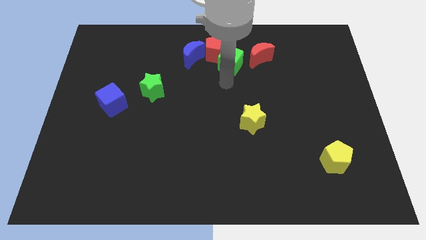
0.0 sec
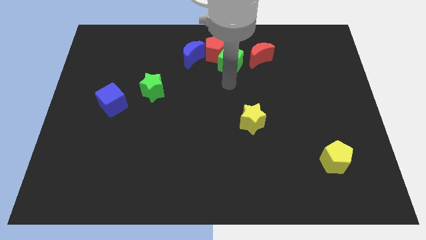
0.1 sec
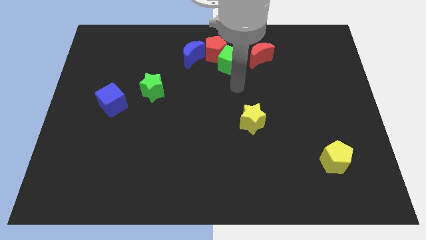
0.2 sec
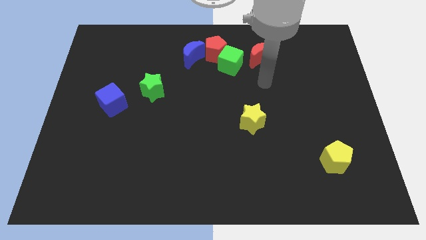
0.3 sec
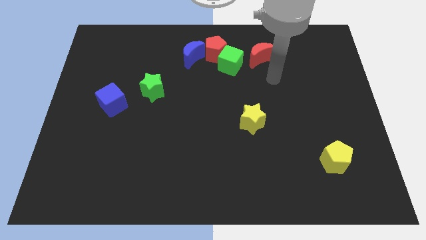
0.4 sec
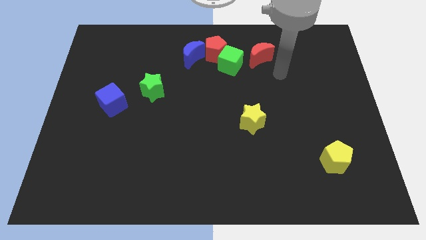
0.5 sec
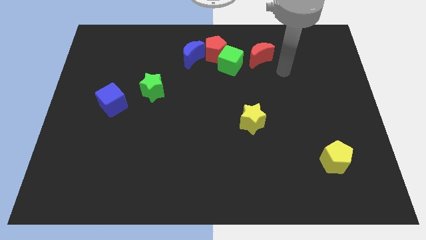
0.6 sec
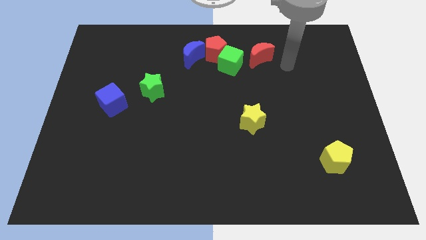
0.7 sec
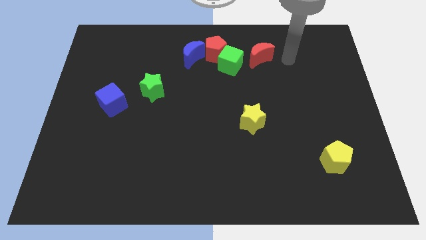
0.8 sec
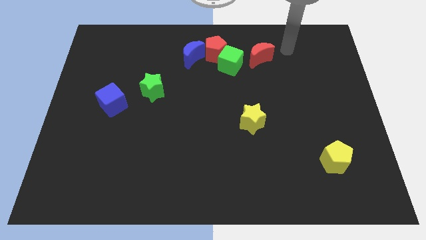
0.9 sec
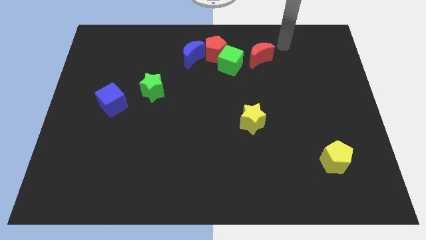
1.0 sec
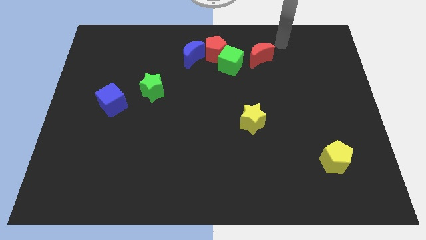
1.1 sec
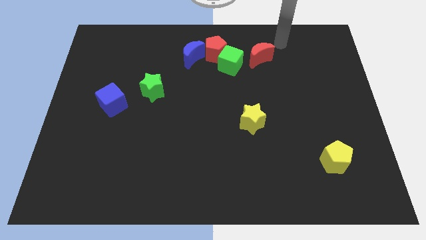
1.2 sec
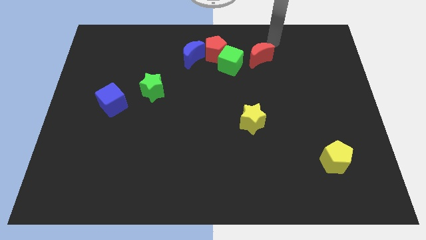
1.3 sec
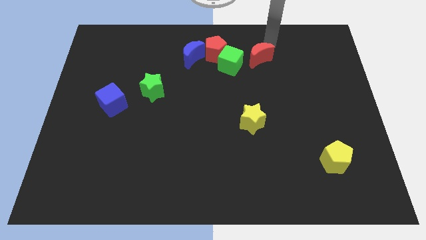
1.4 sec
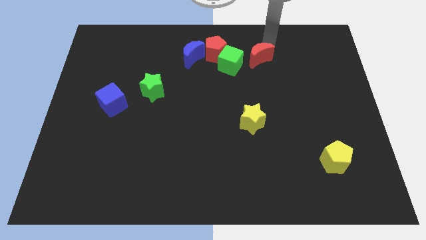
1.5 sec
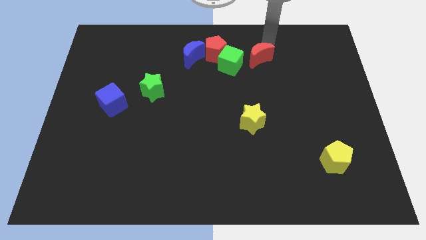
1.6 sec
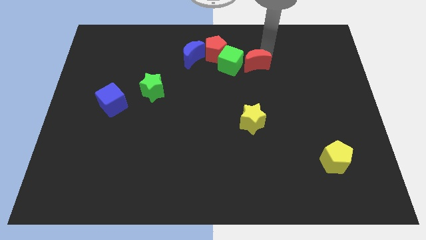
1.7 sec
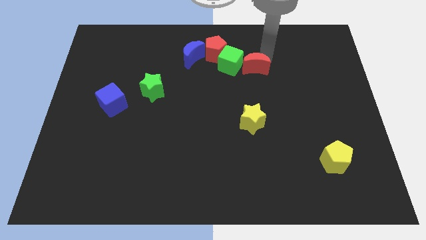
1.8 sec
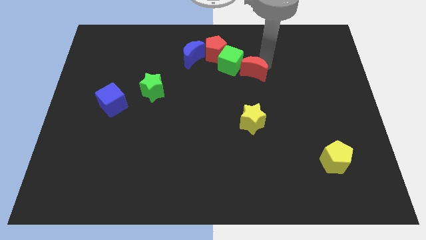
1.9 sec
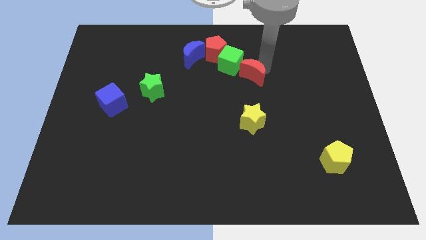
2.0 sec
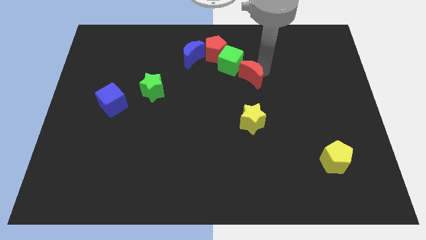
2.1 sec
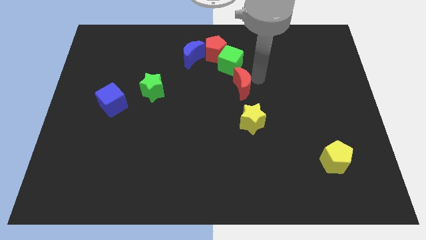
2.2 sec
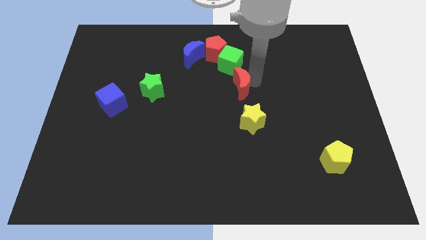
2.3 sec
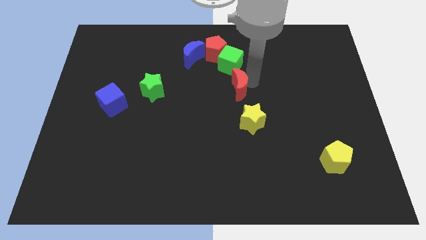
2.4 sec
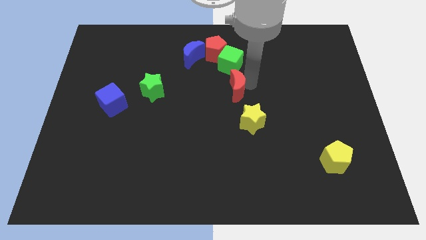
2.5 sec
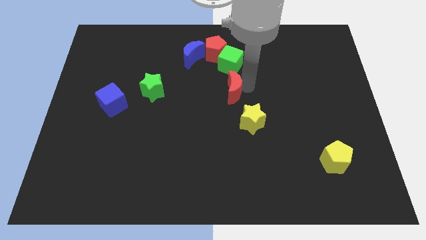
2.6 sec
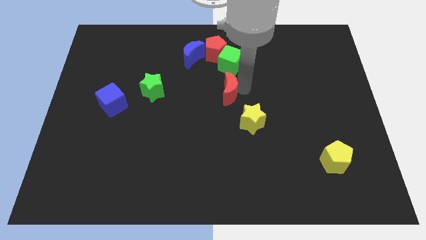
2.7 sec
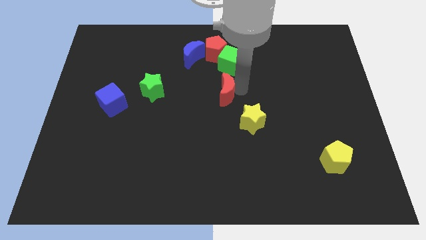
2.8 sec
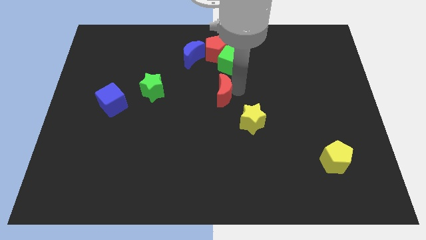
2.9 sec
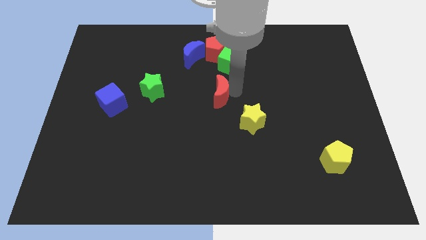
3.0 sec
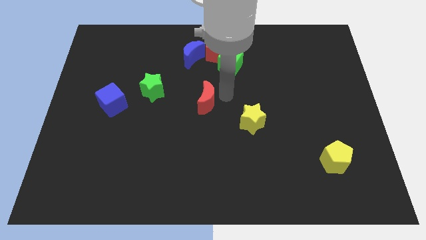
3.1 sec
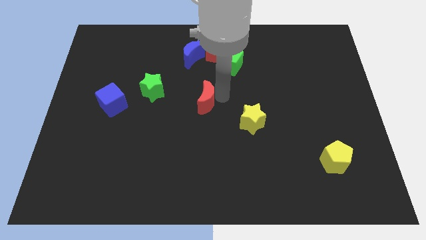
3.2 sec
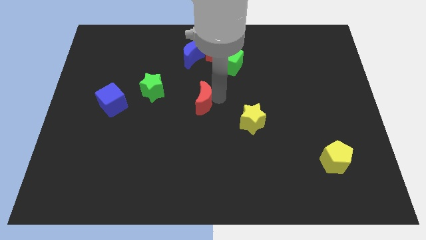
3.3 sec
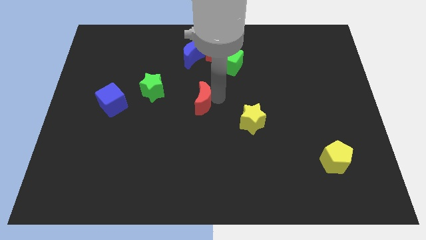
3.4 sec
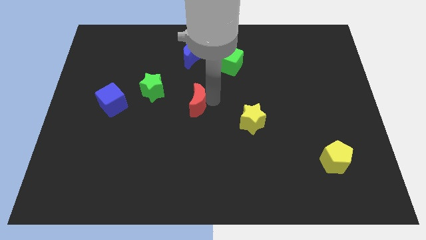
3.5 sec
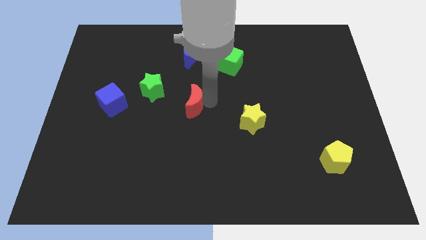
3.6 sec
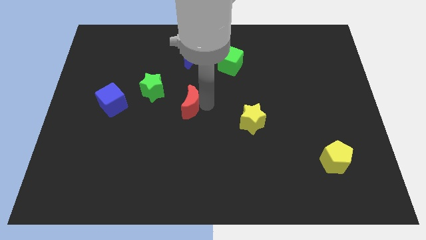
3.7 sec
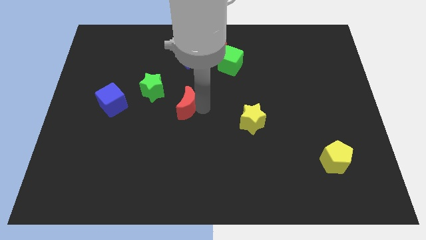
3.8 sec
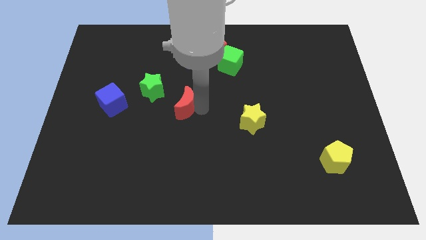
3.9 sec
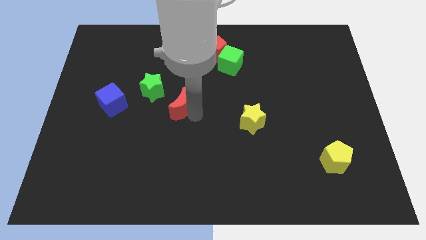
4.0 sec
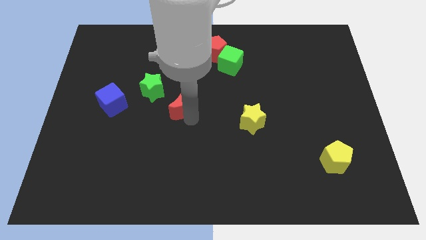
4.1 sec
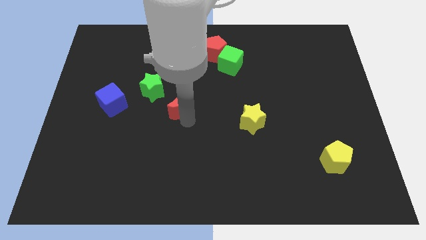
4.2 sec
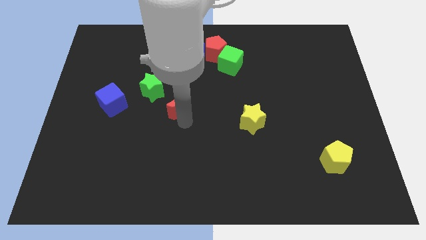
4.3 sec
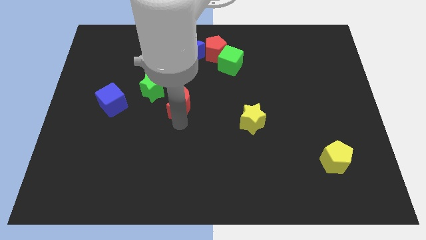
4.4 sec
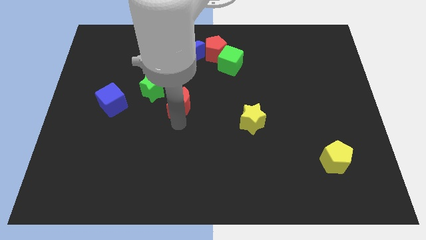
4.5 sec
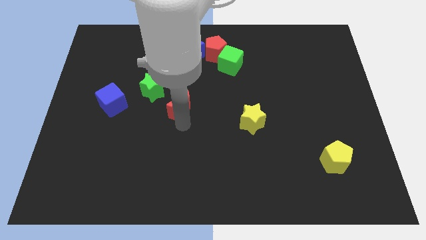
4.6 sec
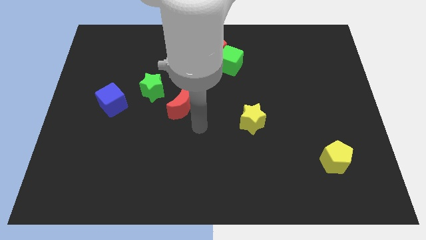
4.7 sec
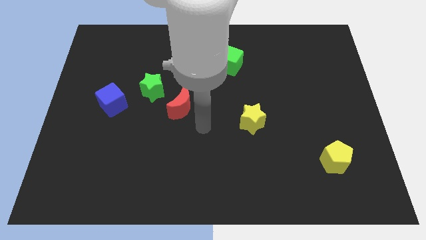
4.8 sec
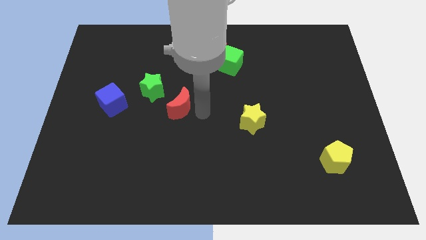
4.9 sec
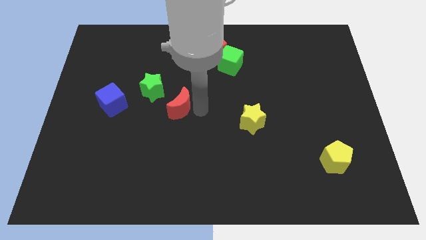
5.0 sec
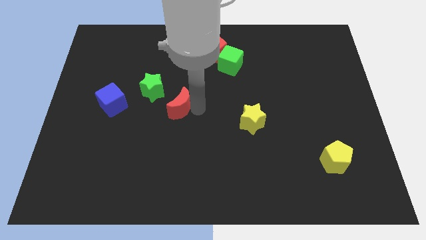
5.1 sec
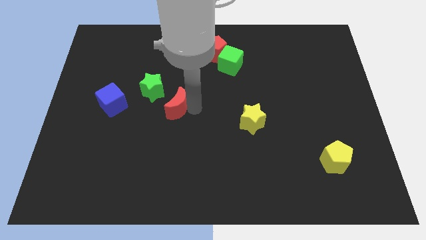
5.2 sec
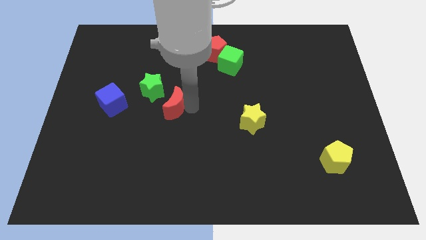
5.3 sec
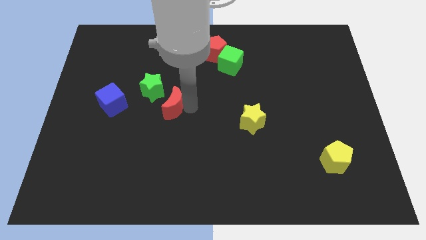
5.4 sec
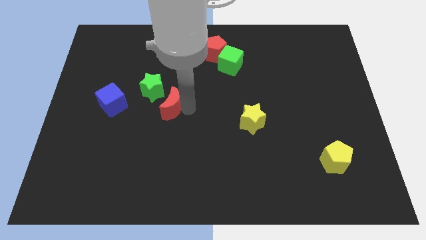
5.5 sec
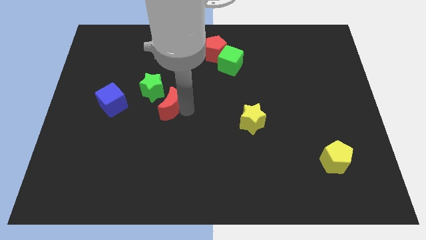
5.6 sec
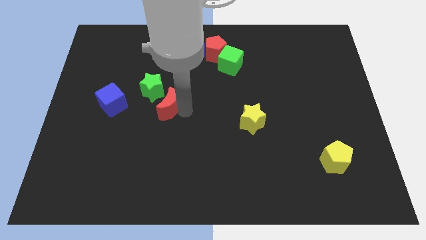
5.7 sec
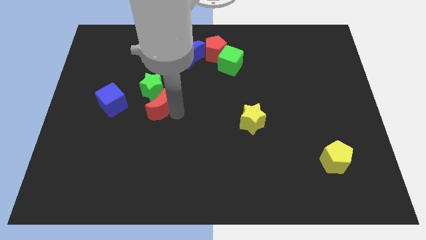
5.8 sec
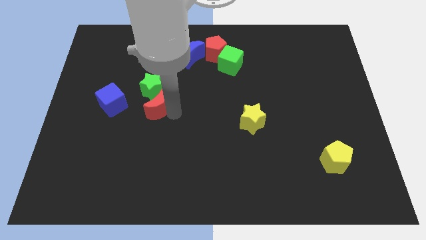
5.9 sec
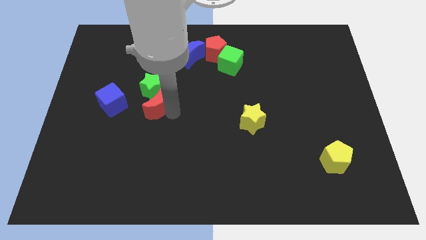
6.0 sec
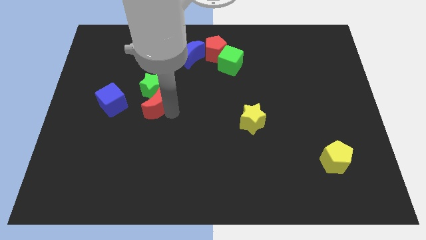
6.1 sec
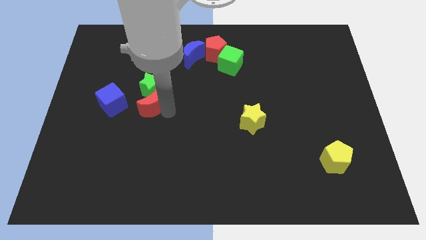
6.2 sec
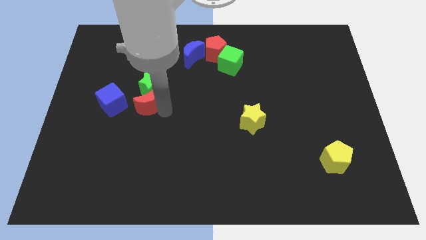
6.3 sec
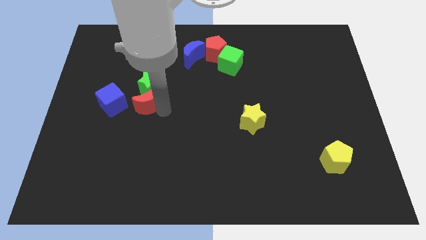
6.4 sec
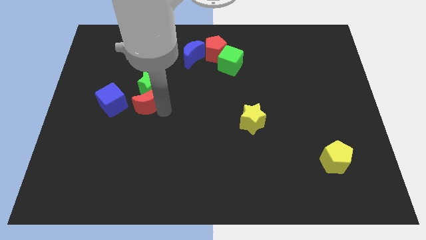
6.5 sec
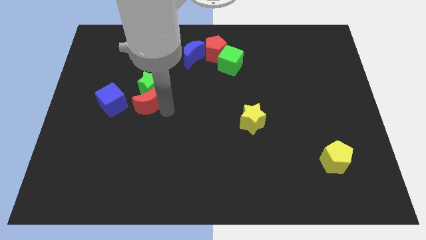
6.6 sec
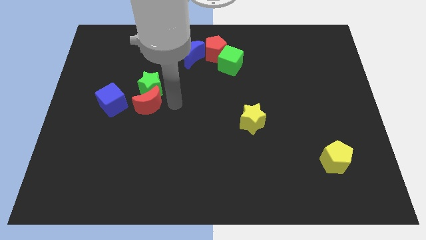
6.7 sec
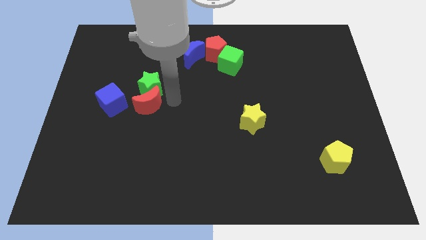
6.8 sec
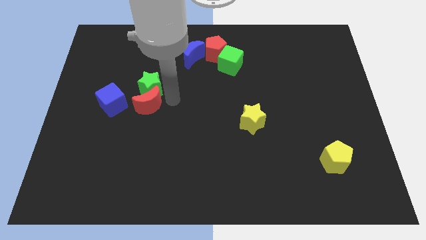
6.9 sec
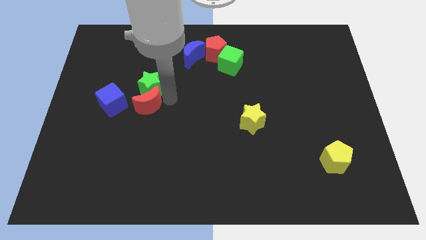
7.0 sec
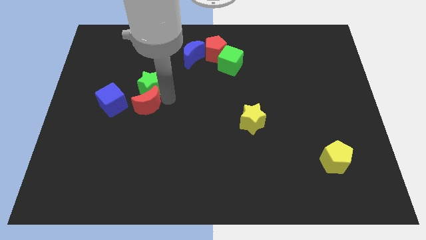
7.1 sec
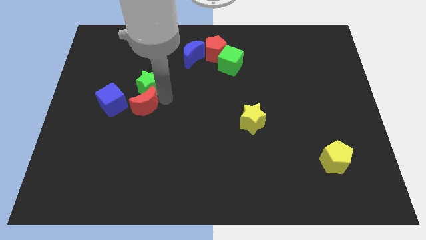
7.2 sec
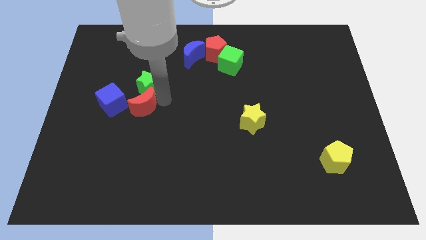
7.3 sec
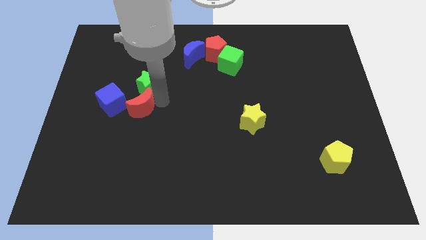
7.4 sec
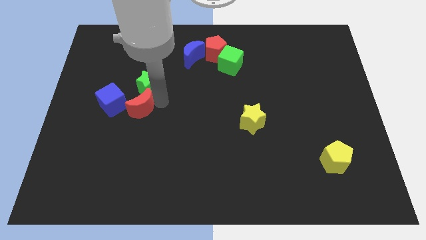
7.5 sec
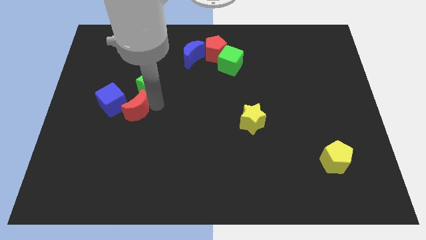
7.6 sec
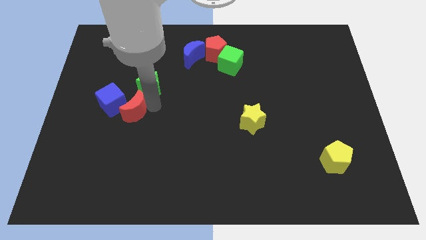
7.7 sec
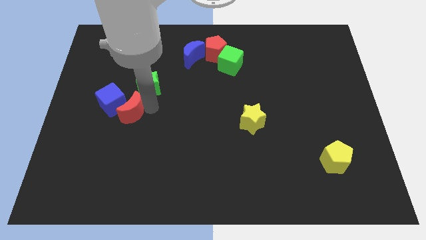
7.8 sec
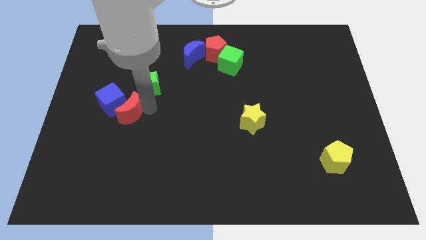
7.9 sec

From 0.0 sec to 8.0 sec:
slide the red moon towards the blue cube

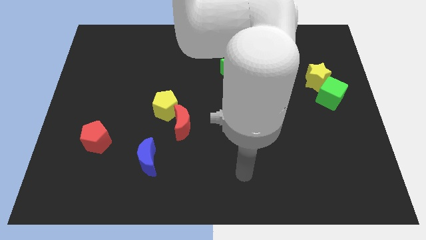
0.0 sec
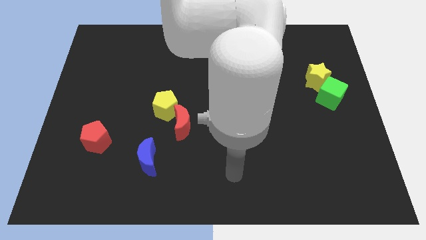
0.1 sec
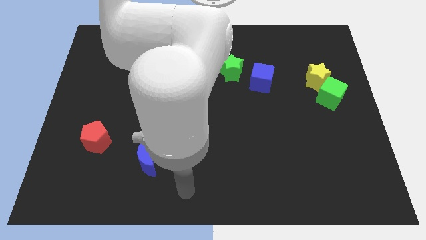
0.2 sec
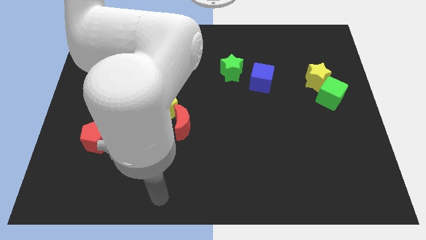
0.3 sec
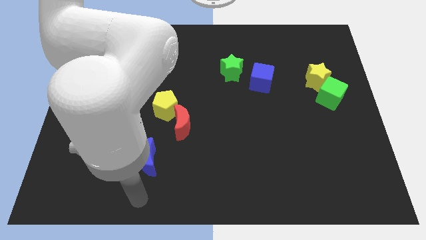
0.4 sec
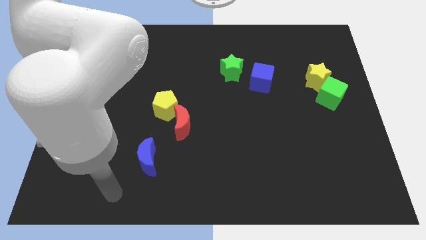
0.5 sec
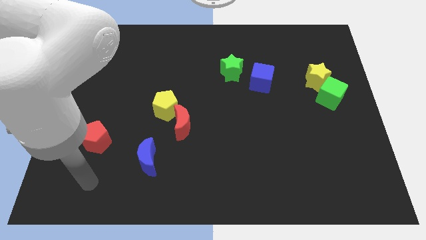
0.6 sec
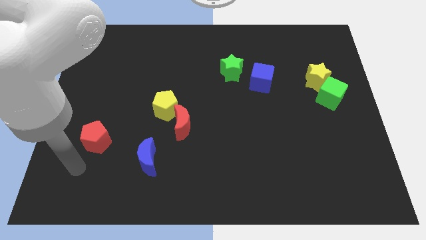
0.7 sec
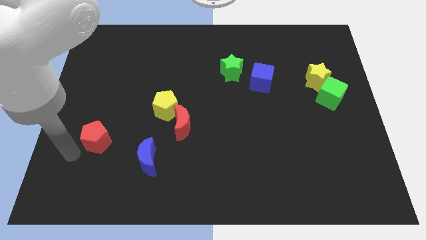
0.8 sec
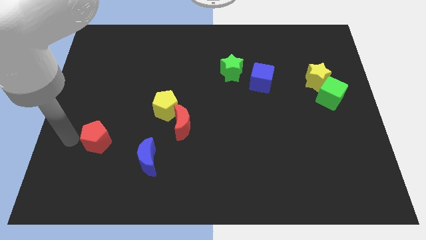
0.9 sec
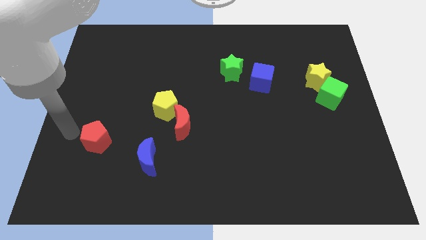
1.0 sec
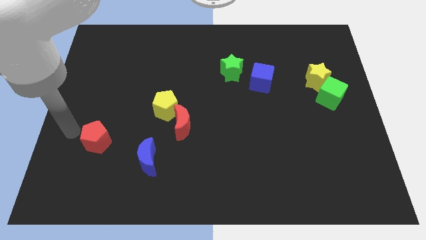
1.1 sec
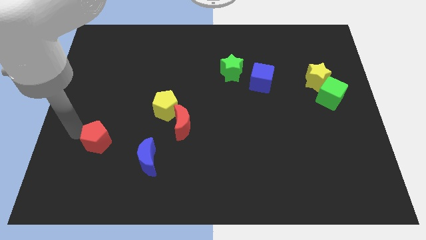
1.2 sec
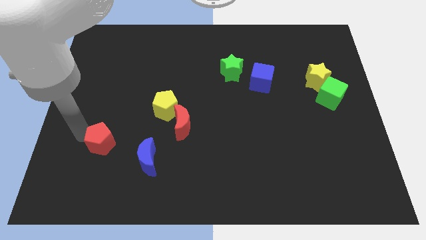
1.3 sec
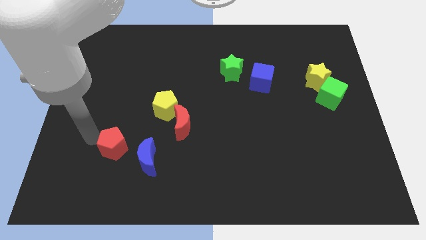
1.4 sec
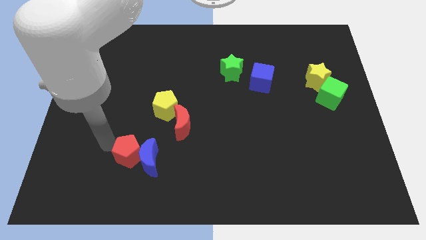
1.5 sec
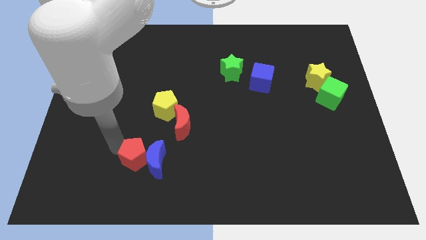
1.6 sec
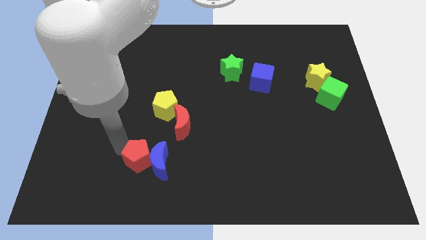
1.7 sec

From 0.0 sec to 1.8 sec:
move the red pentagon close to the blue moon
